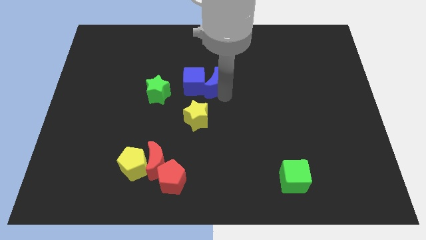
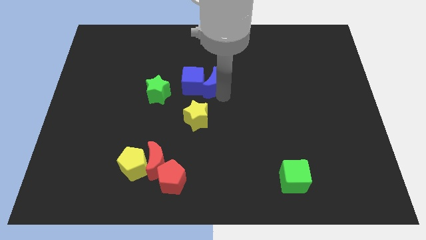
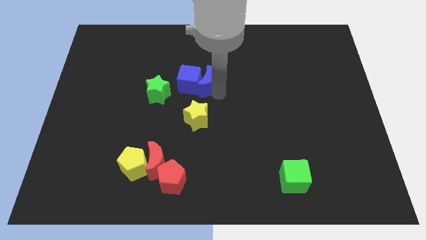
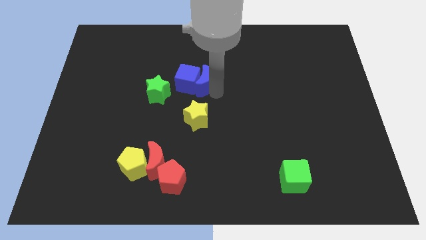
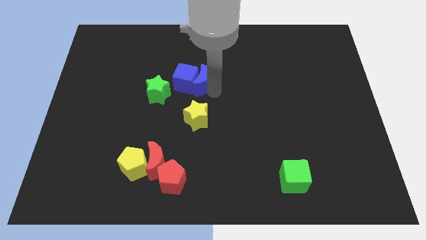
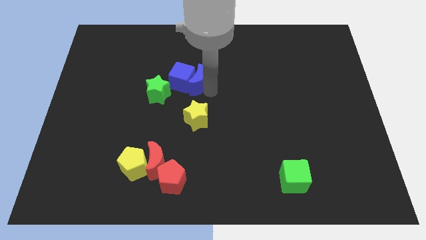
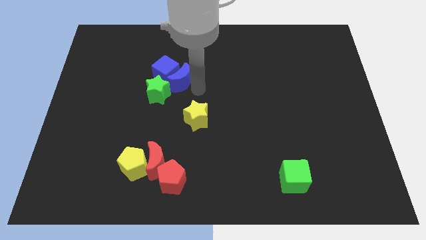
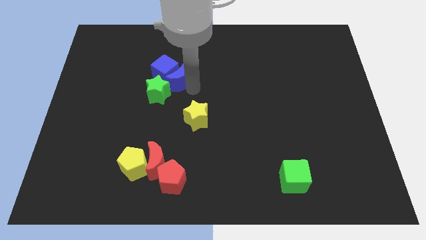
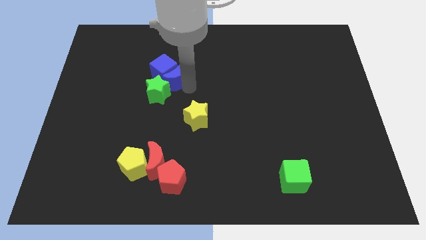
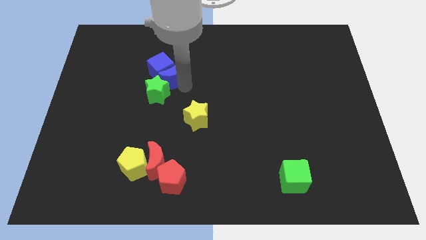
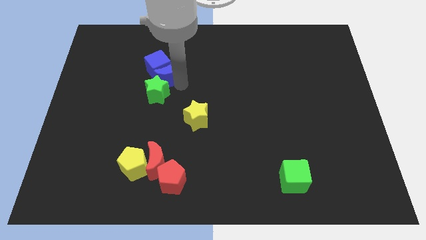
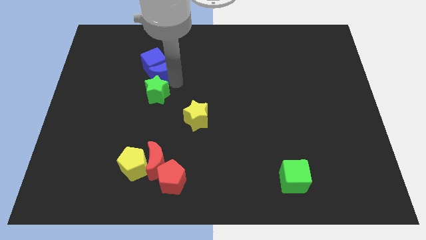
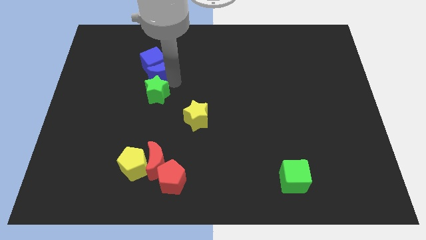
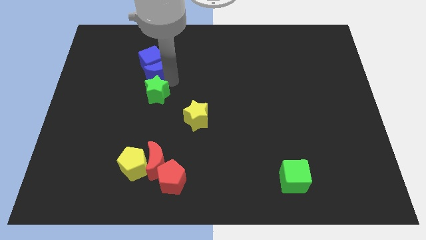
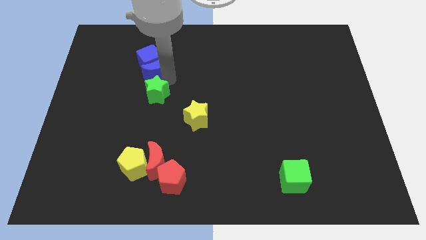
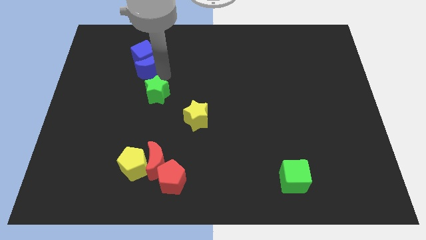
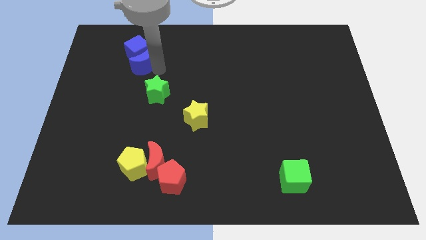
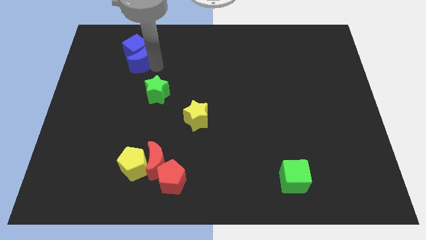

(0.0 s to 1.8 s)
push the blue moon and blue cube to the left side of the board

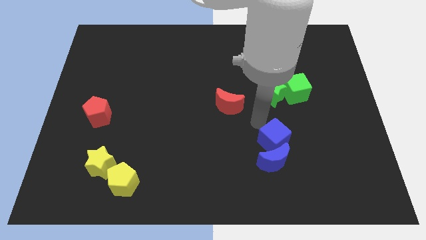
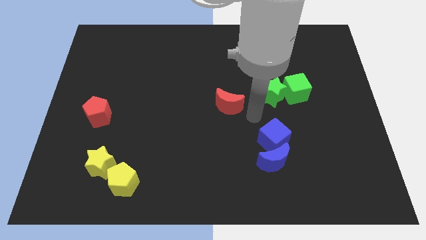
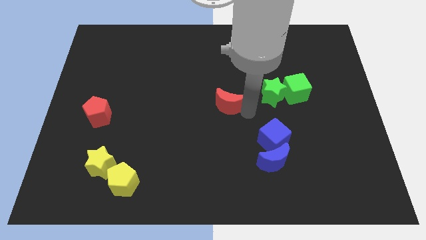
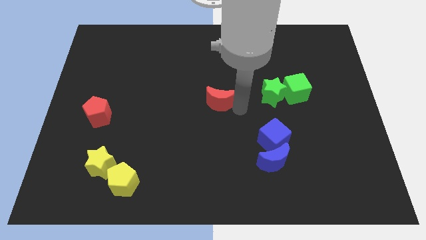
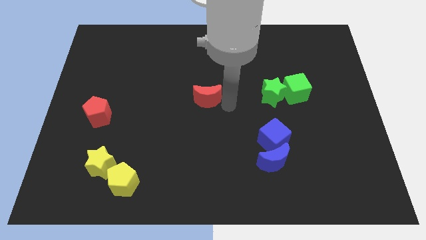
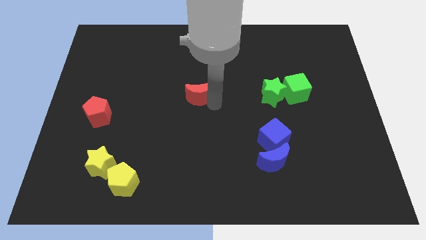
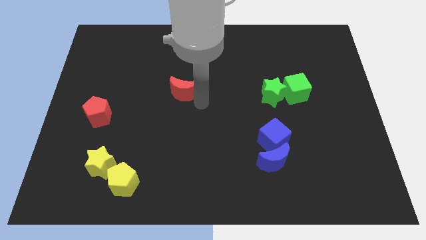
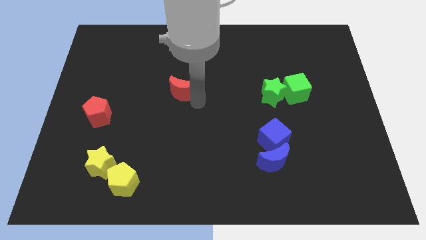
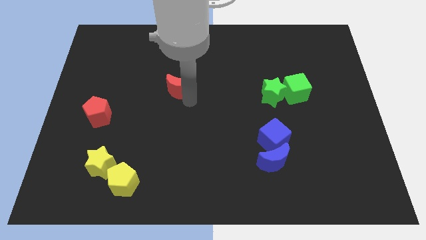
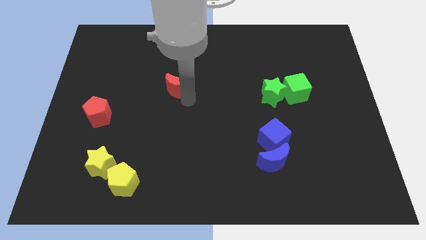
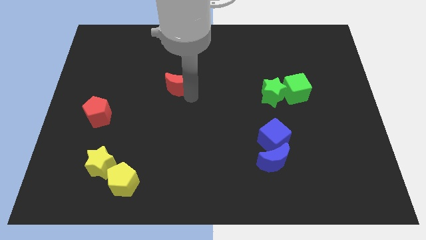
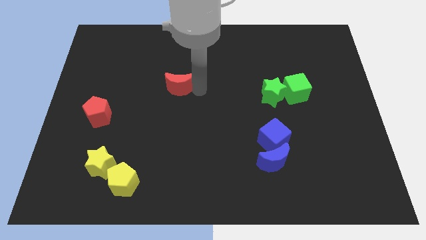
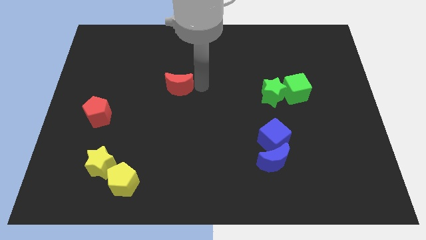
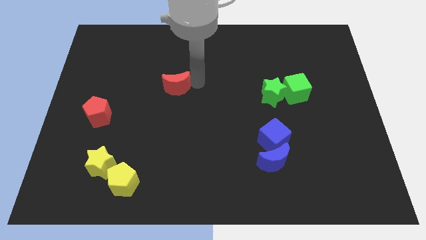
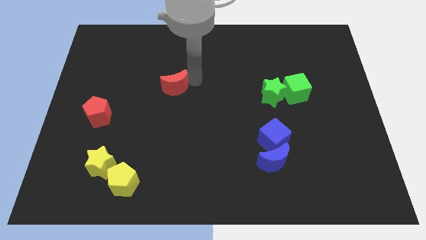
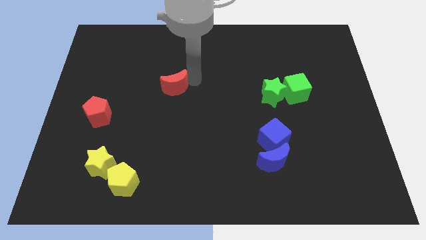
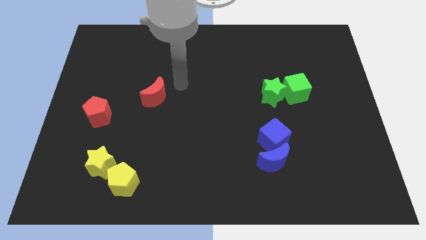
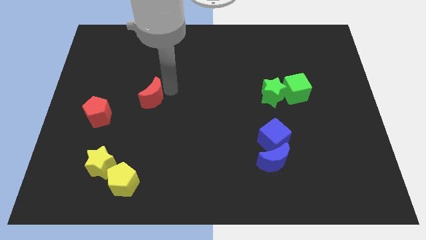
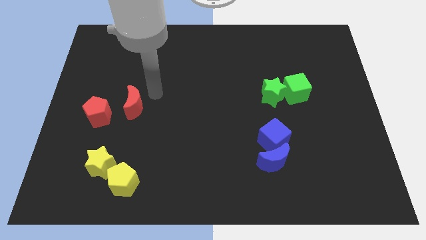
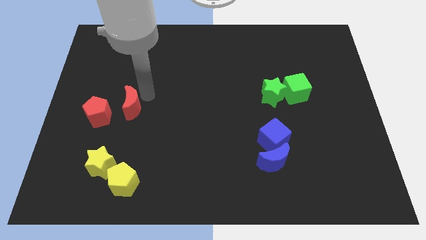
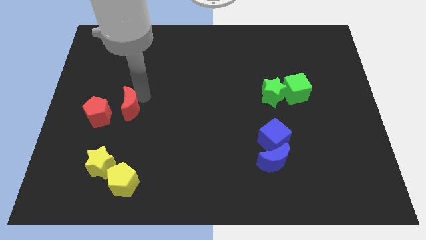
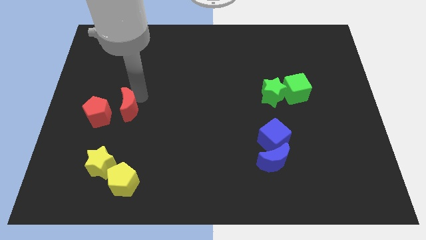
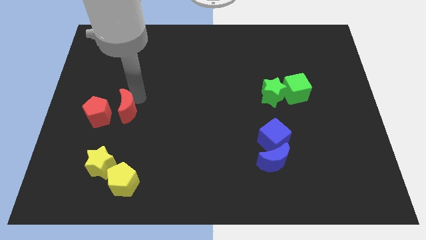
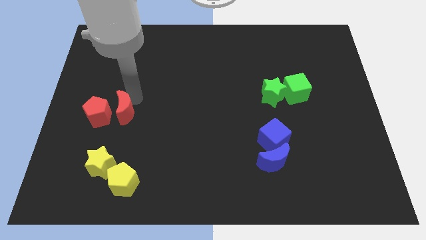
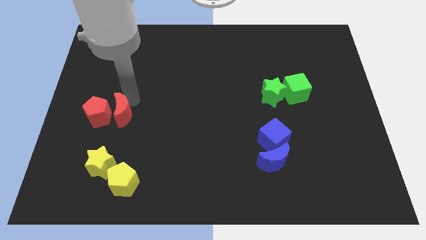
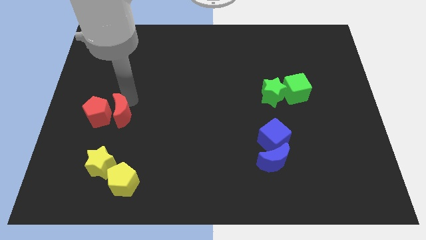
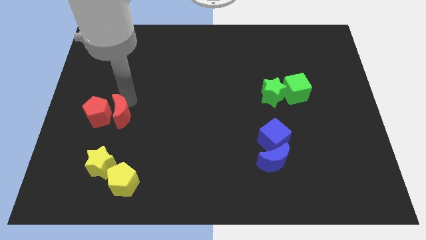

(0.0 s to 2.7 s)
move the red crescent close to the right side of the red pentagon

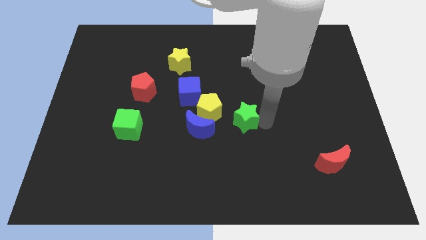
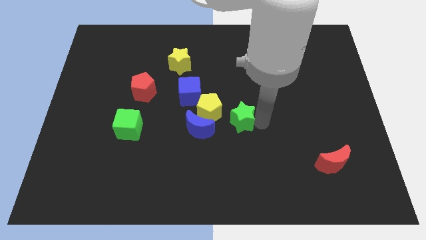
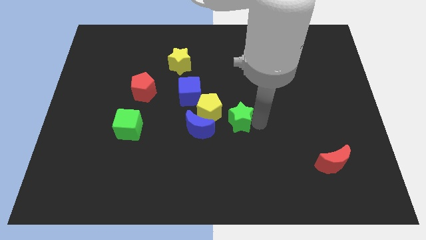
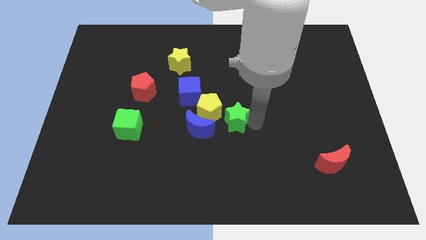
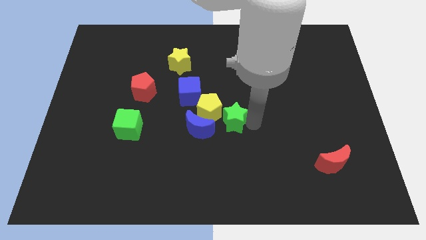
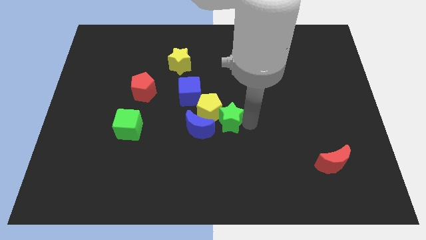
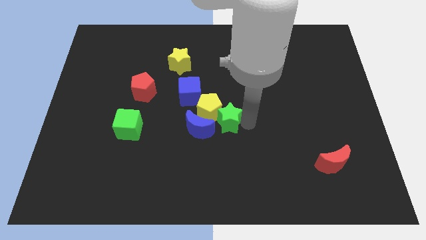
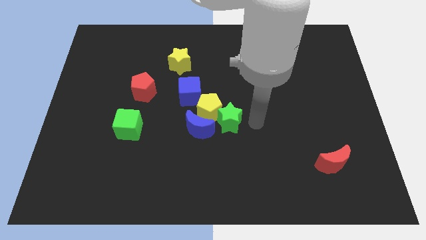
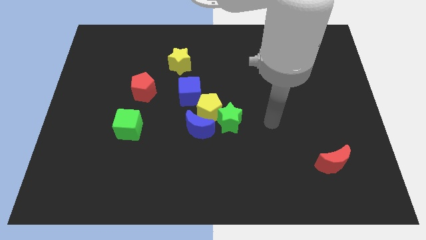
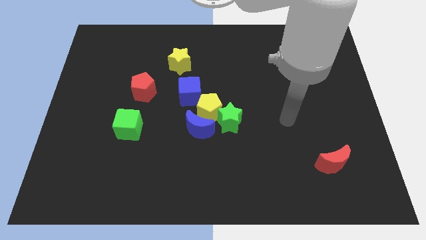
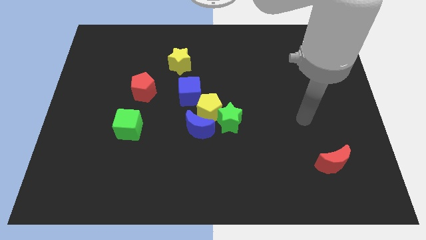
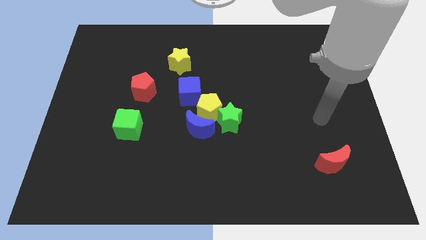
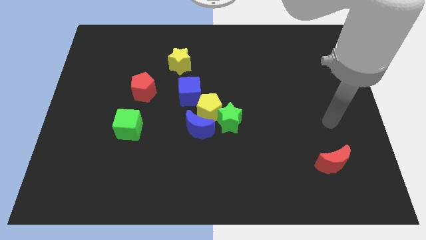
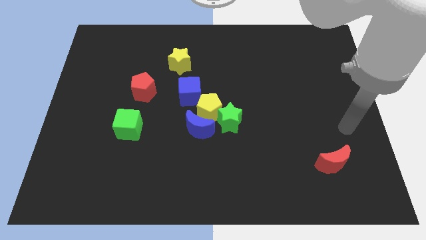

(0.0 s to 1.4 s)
slide the green star into the yellow pentagon

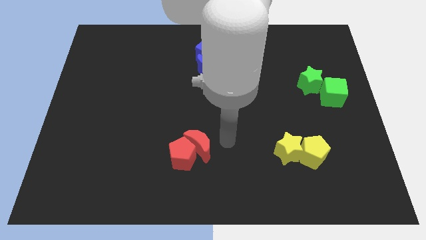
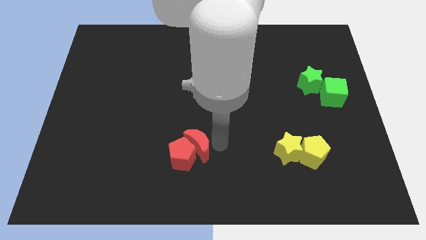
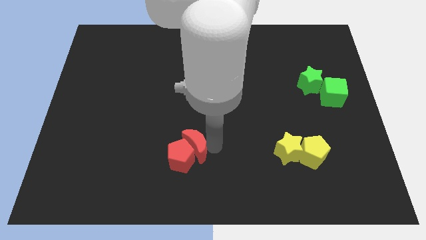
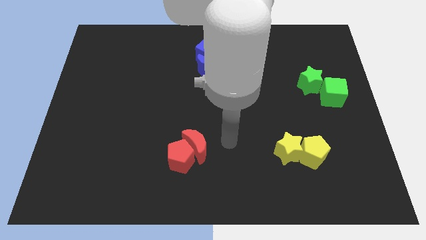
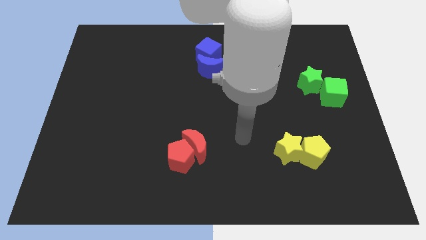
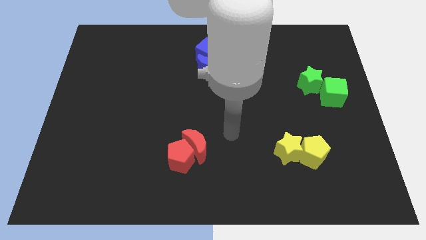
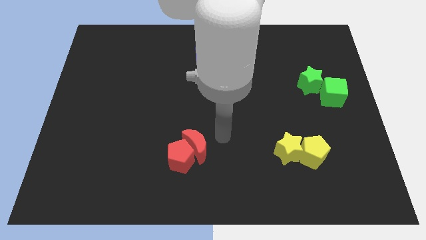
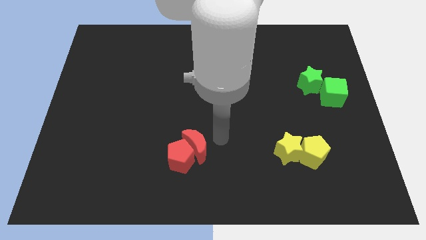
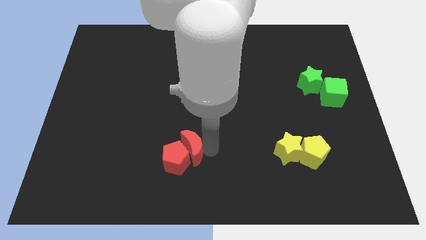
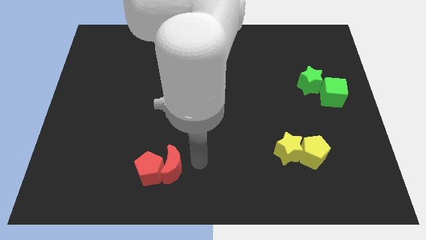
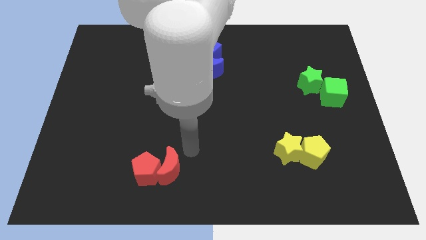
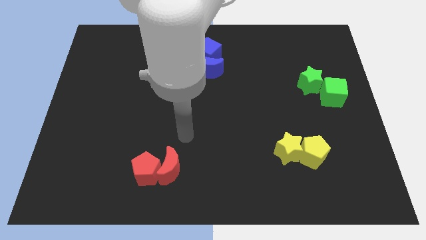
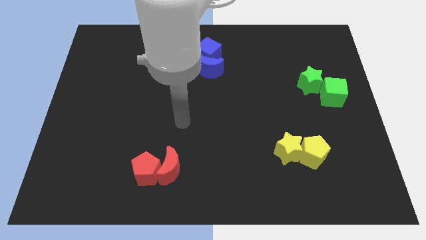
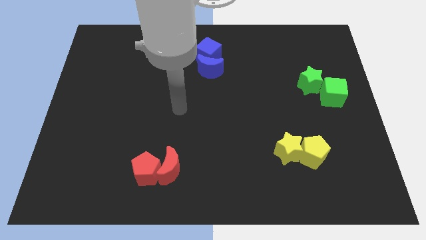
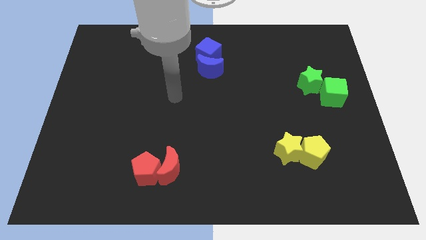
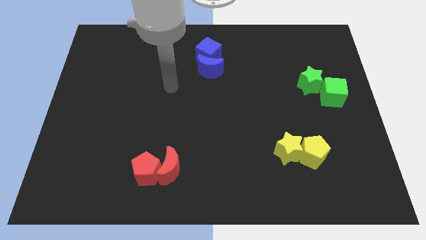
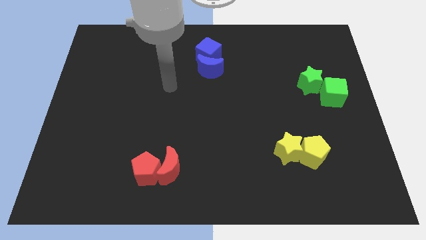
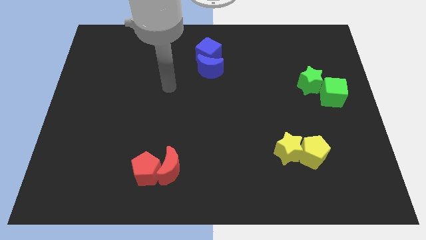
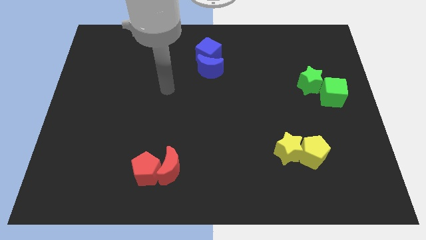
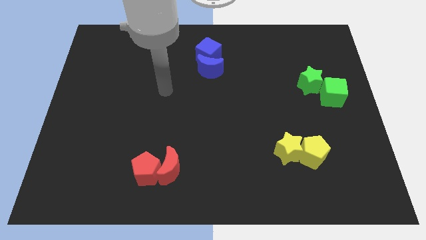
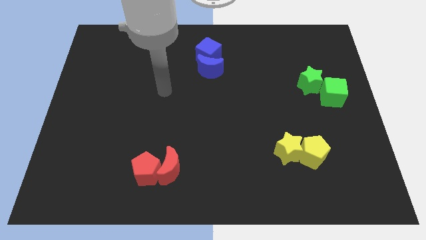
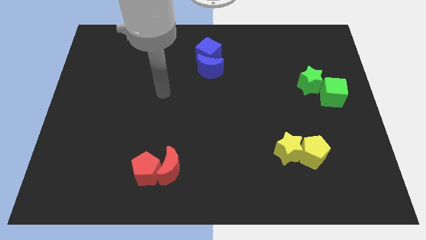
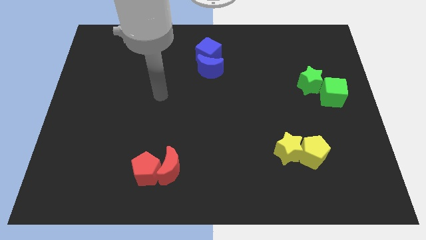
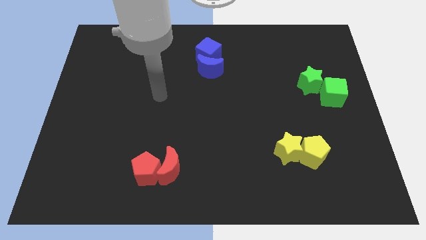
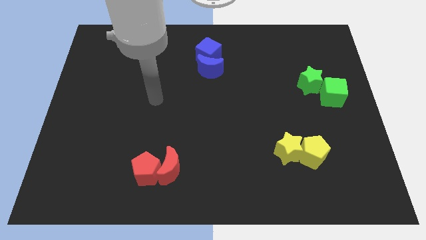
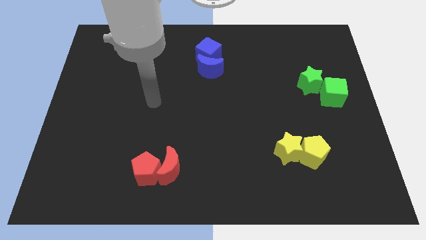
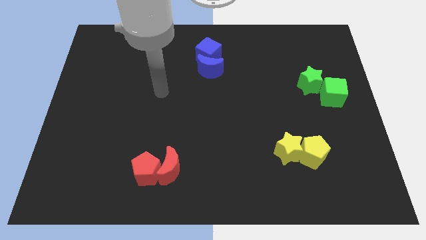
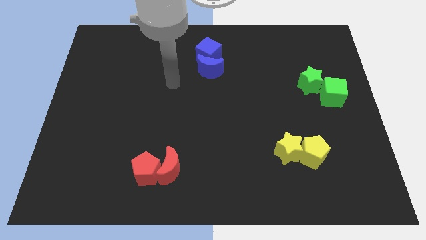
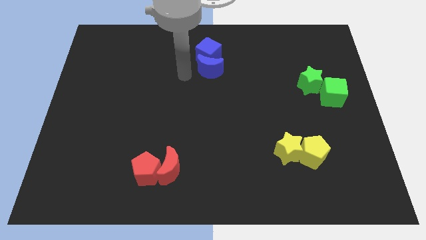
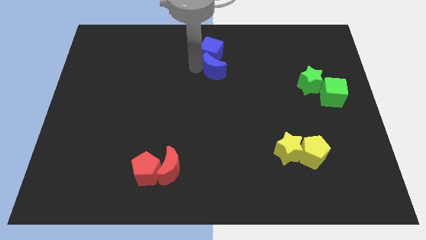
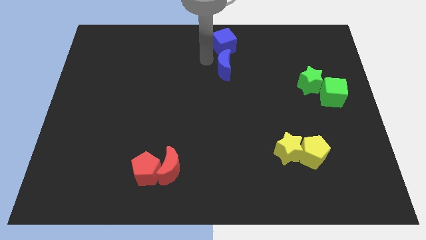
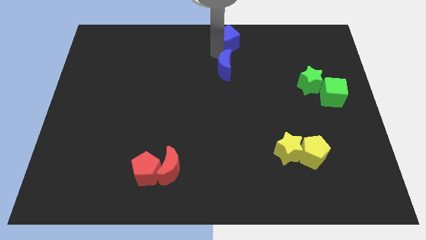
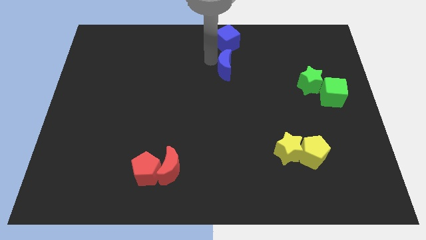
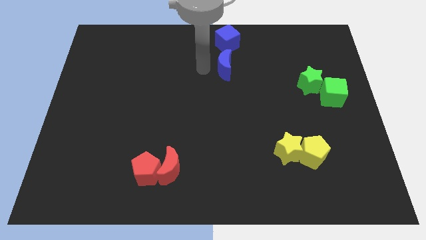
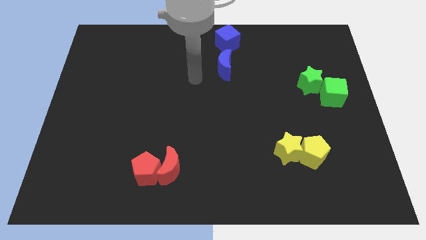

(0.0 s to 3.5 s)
push the red pentagon and red moon downwards and seperate the blue moon and blue cube
